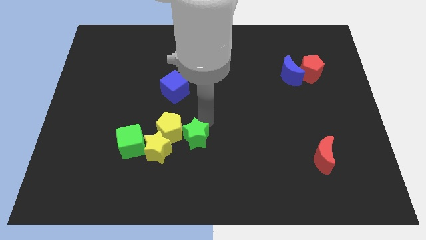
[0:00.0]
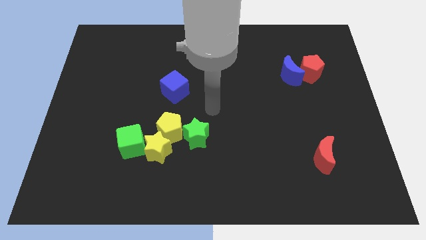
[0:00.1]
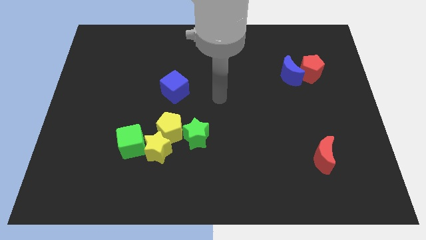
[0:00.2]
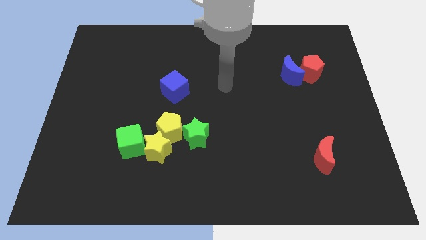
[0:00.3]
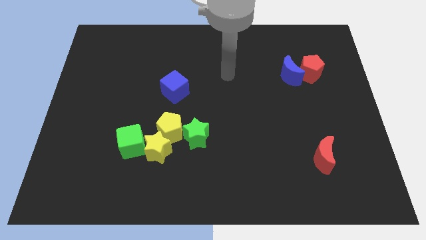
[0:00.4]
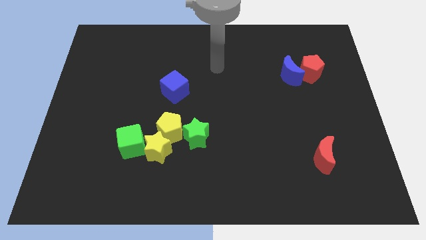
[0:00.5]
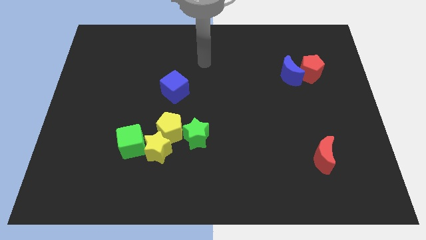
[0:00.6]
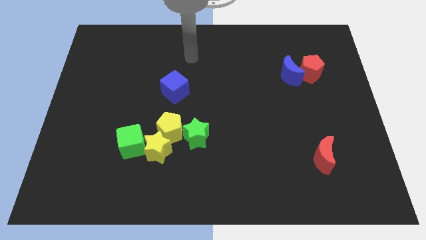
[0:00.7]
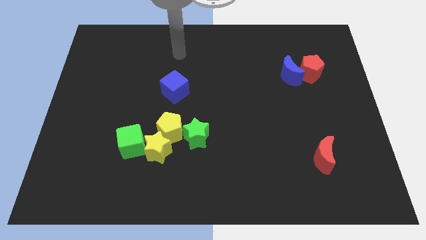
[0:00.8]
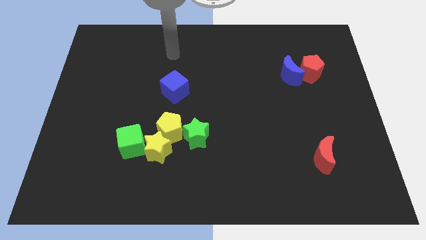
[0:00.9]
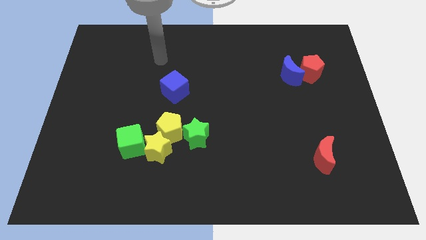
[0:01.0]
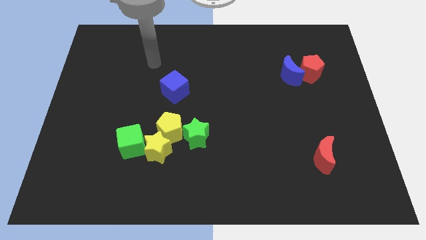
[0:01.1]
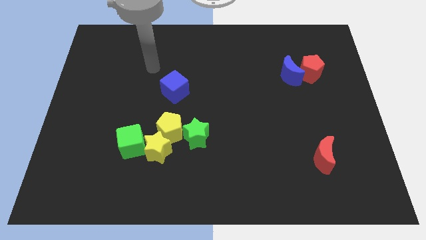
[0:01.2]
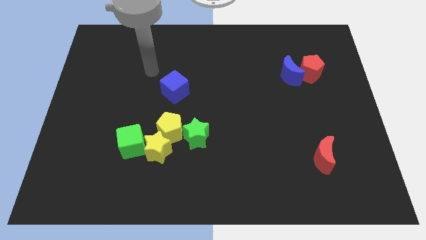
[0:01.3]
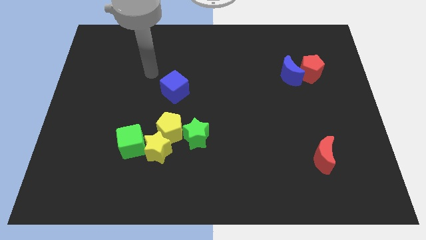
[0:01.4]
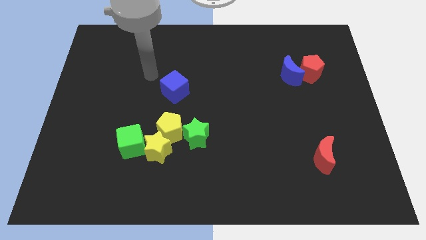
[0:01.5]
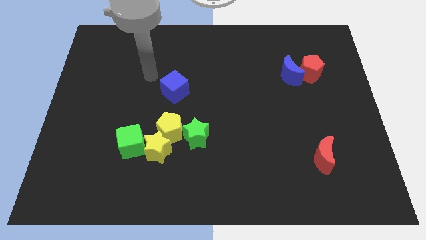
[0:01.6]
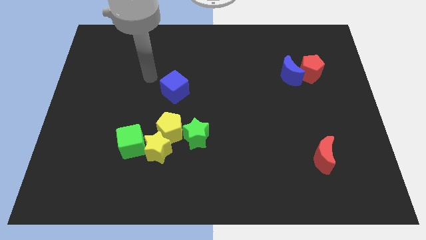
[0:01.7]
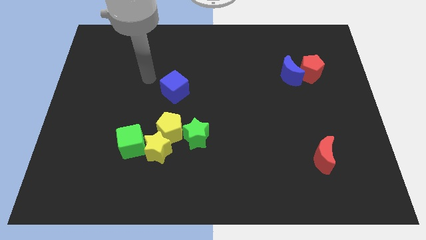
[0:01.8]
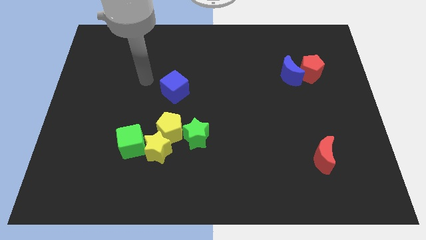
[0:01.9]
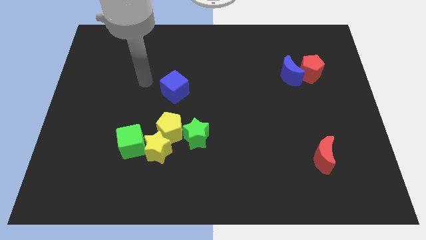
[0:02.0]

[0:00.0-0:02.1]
move your arm left to the blue cube

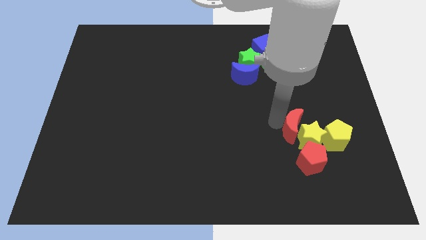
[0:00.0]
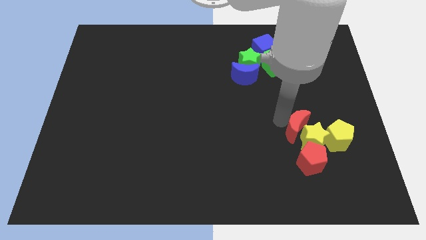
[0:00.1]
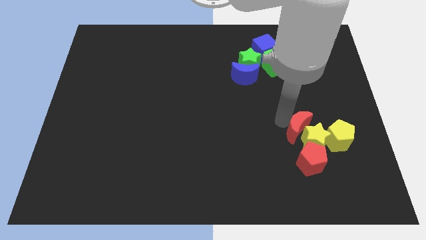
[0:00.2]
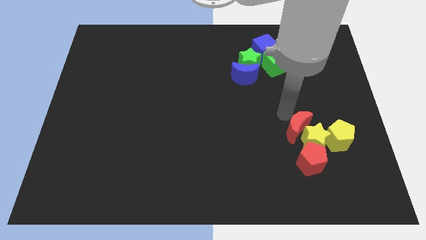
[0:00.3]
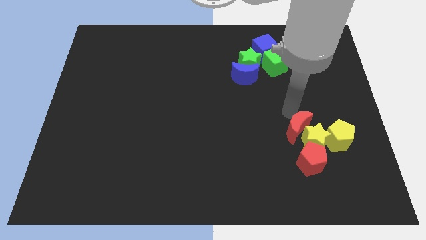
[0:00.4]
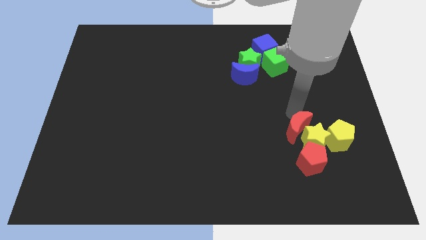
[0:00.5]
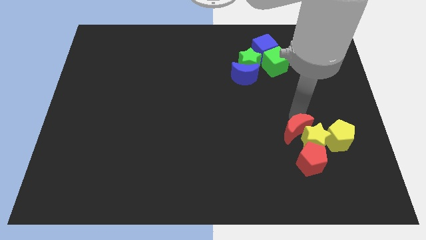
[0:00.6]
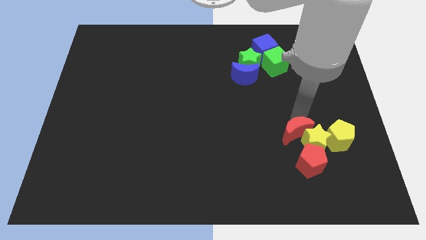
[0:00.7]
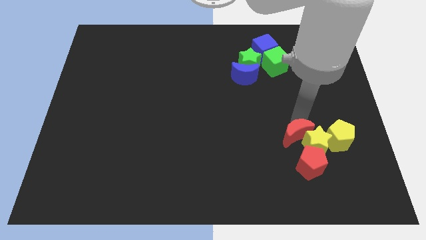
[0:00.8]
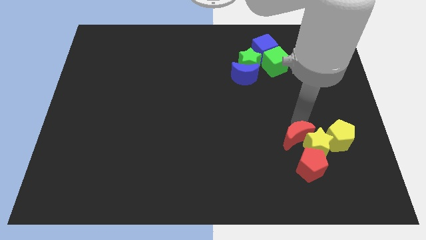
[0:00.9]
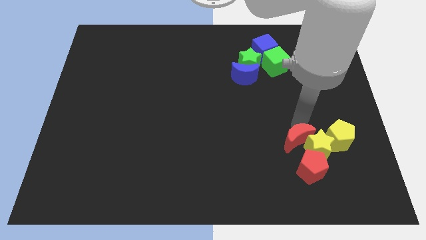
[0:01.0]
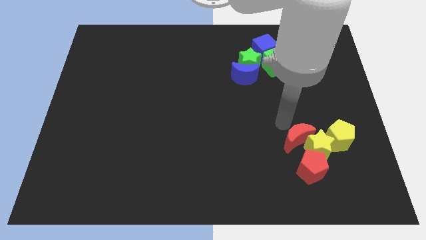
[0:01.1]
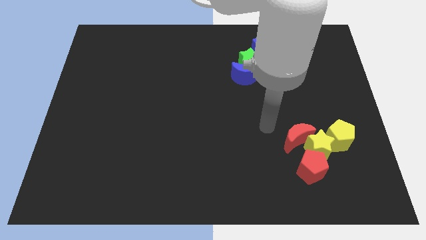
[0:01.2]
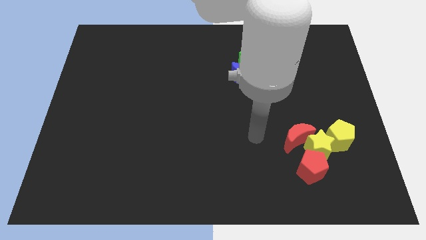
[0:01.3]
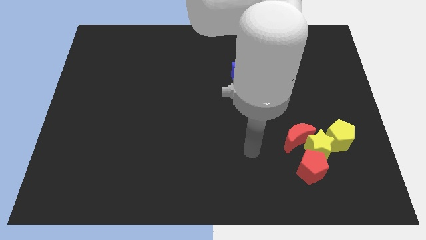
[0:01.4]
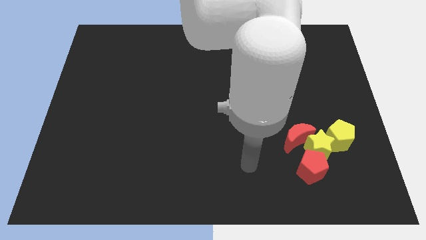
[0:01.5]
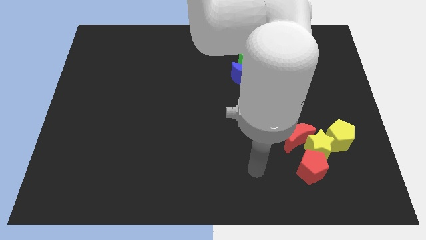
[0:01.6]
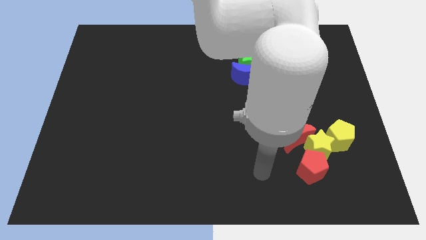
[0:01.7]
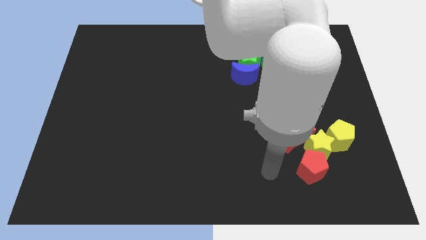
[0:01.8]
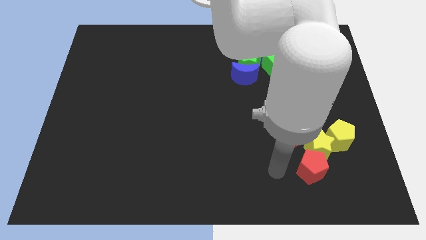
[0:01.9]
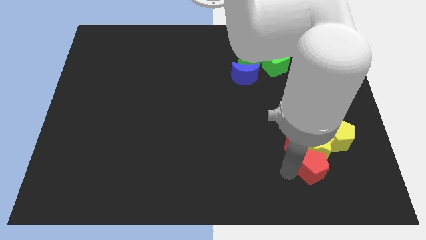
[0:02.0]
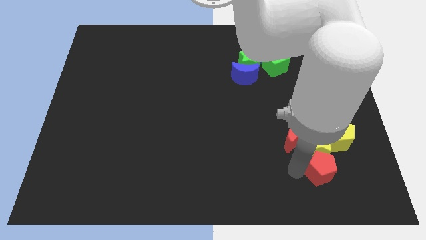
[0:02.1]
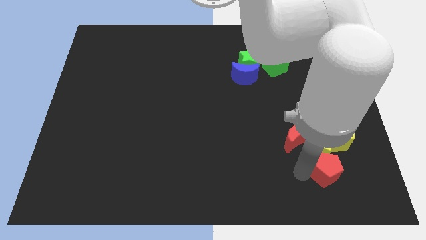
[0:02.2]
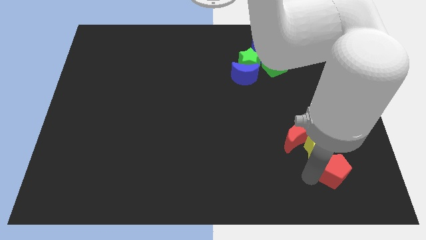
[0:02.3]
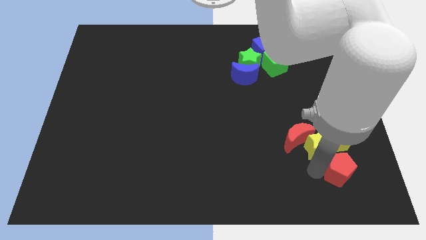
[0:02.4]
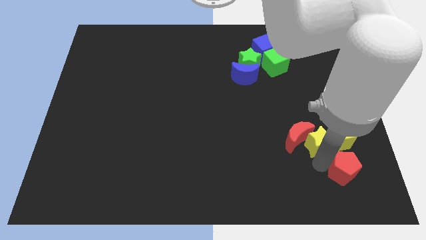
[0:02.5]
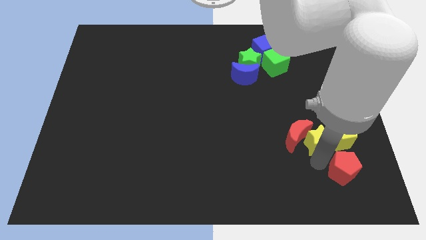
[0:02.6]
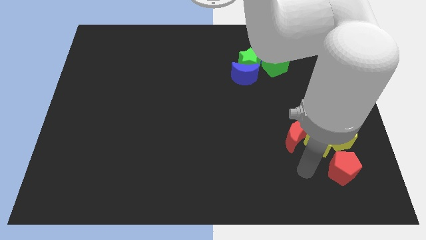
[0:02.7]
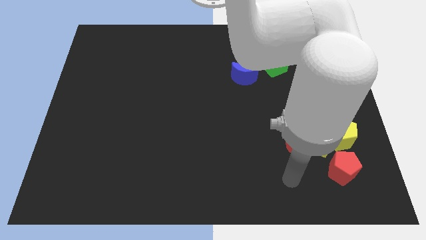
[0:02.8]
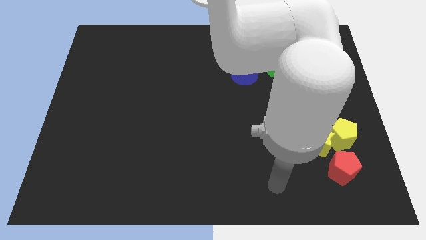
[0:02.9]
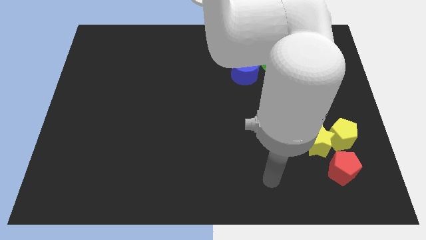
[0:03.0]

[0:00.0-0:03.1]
form a diagonal line with red crescent yellow star and red pentagon

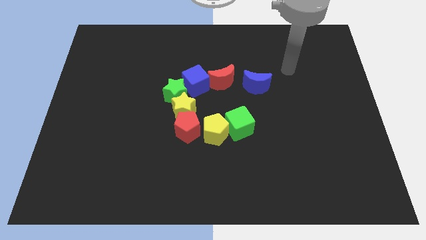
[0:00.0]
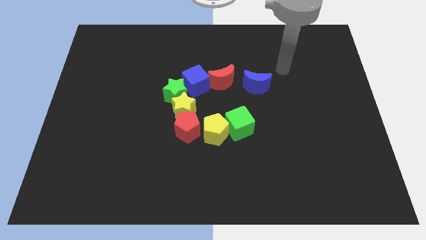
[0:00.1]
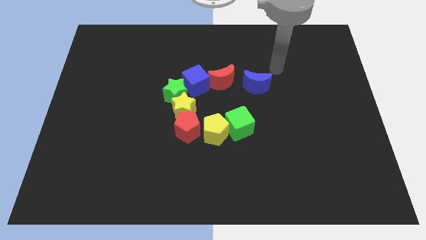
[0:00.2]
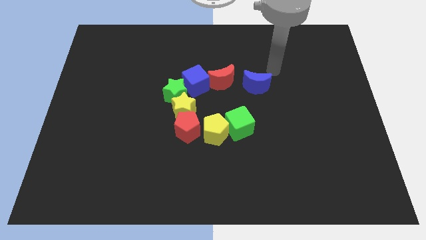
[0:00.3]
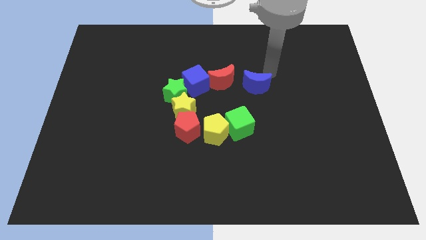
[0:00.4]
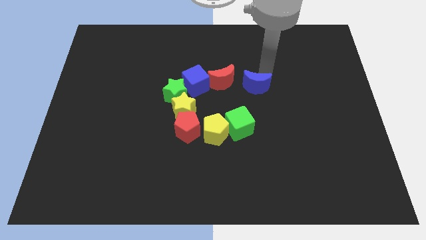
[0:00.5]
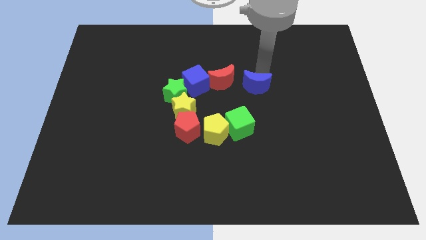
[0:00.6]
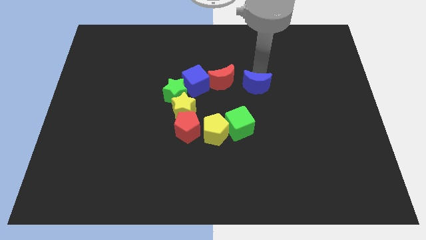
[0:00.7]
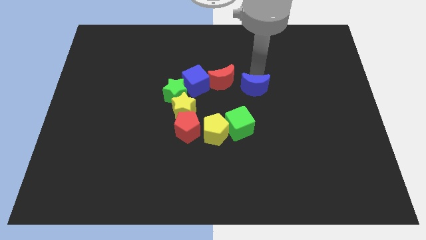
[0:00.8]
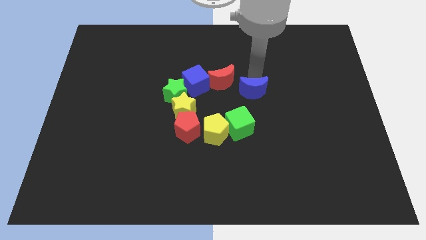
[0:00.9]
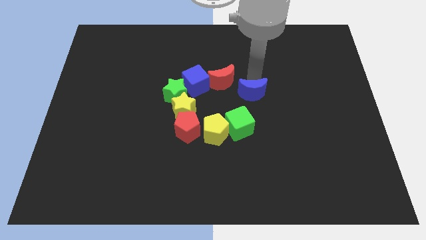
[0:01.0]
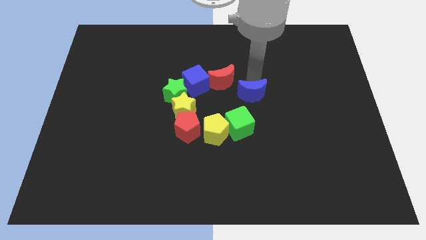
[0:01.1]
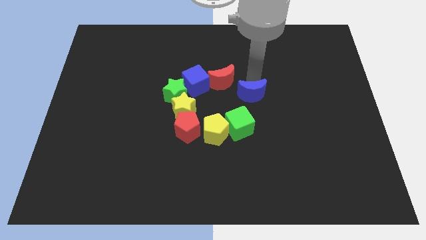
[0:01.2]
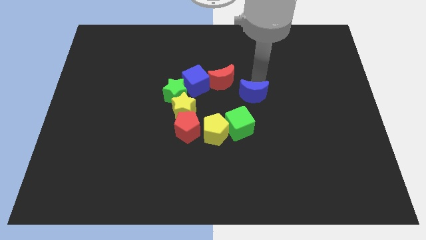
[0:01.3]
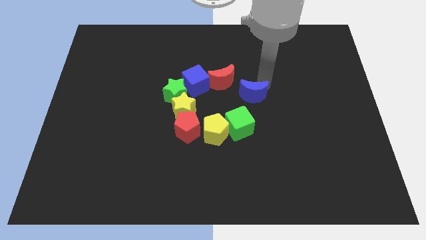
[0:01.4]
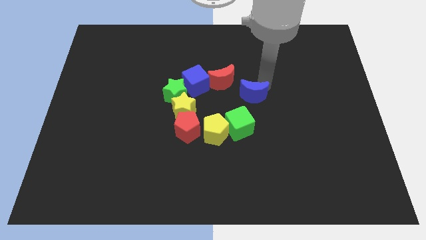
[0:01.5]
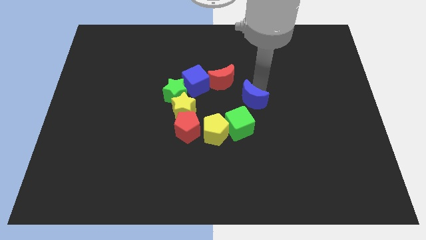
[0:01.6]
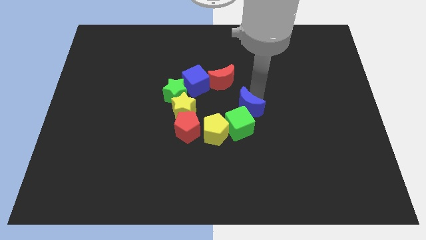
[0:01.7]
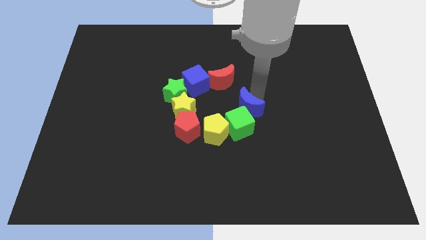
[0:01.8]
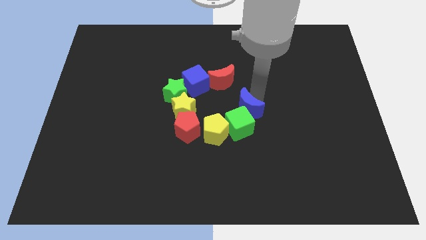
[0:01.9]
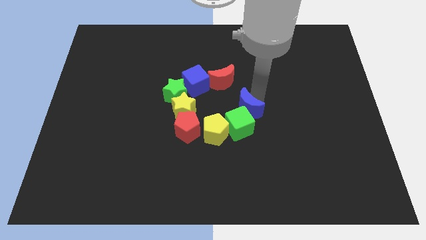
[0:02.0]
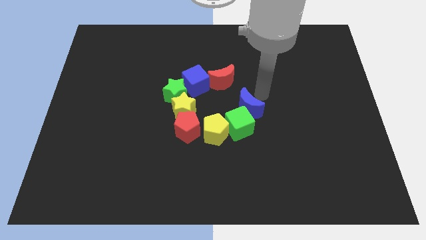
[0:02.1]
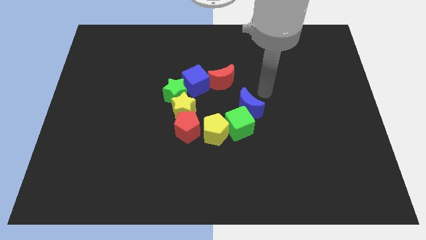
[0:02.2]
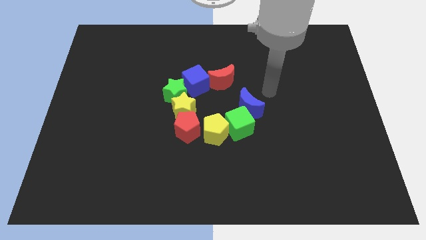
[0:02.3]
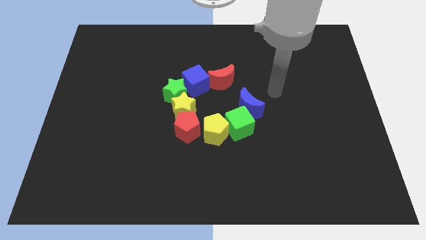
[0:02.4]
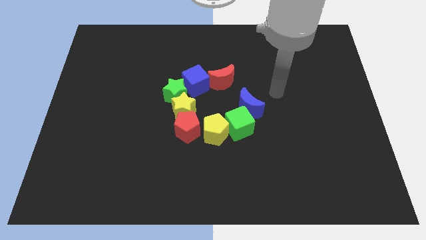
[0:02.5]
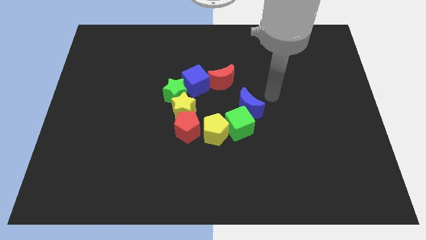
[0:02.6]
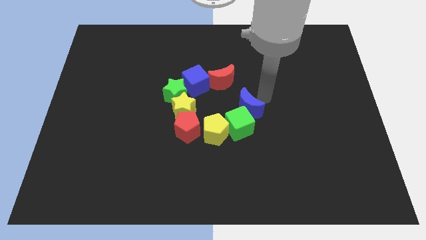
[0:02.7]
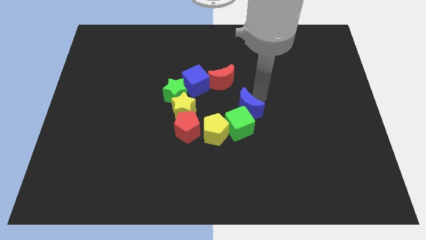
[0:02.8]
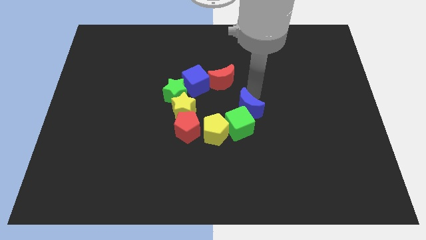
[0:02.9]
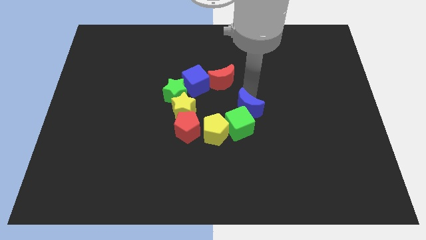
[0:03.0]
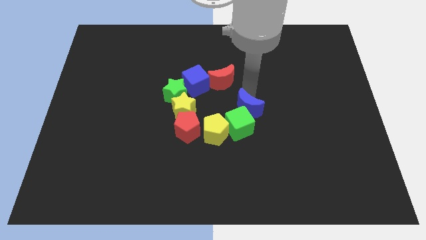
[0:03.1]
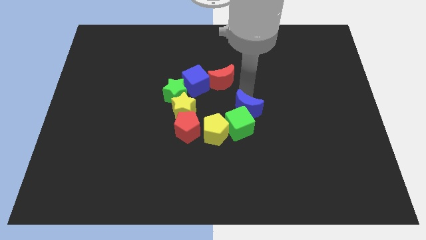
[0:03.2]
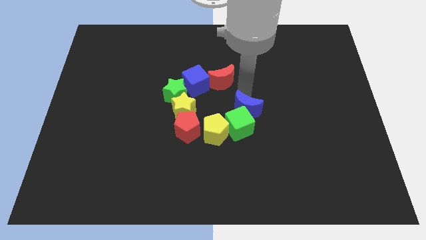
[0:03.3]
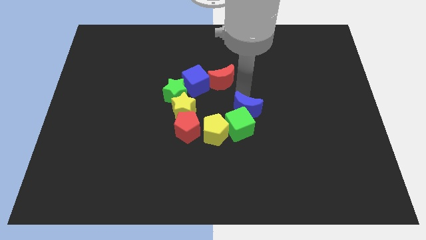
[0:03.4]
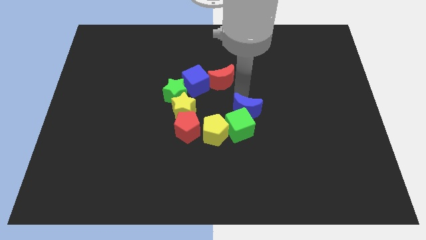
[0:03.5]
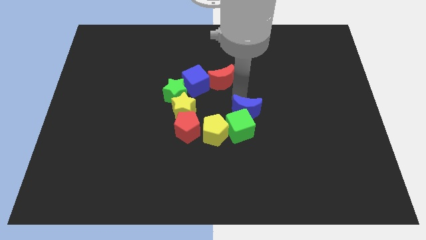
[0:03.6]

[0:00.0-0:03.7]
move blue moon right above green cube
